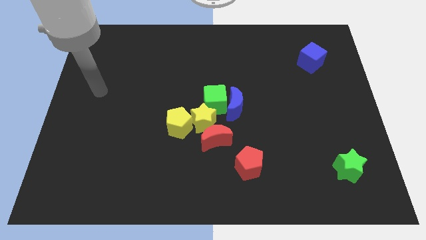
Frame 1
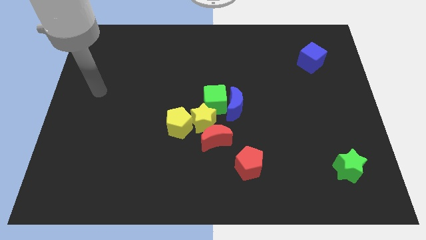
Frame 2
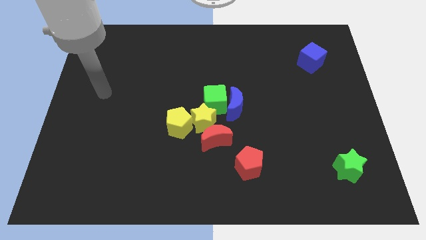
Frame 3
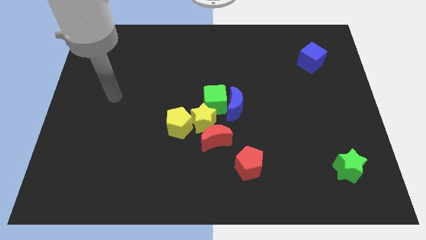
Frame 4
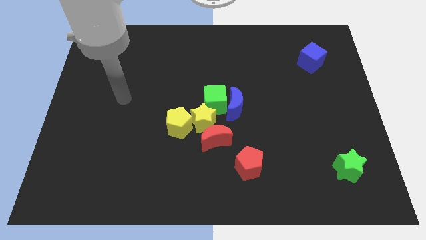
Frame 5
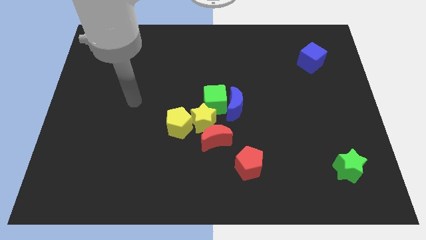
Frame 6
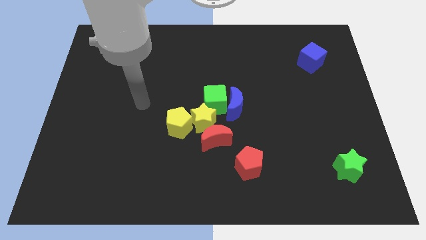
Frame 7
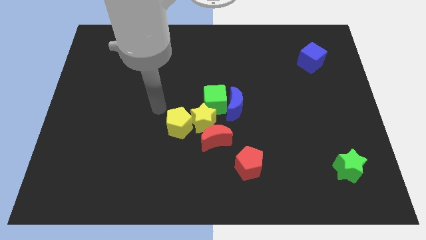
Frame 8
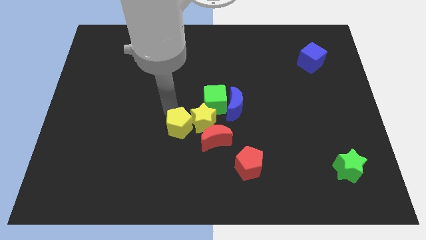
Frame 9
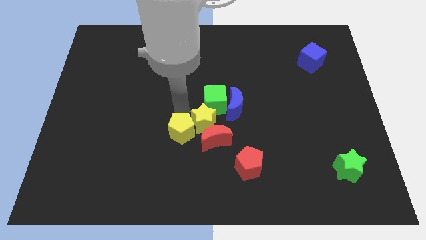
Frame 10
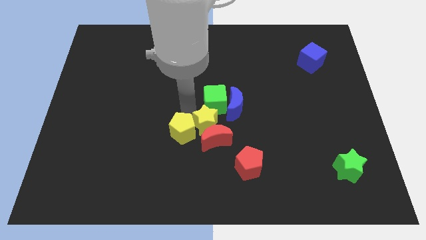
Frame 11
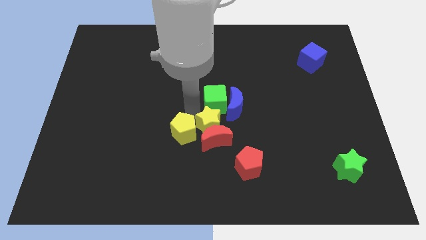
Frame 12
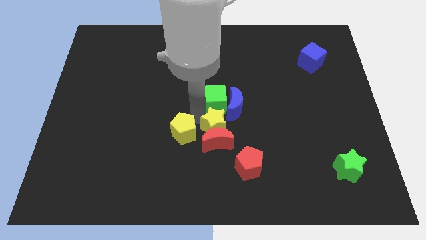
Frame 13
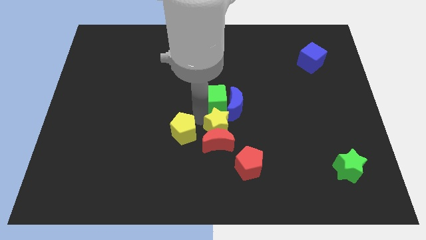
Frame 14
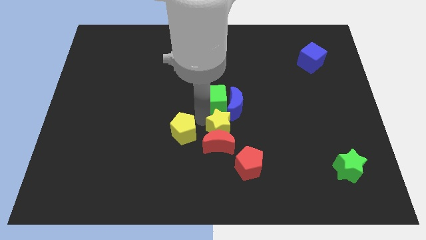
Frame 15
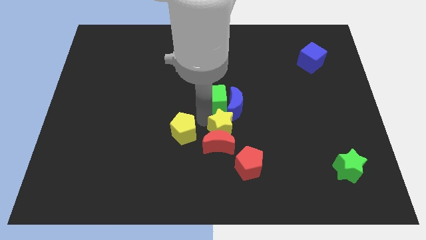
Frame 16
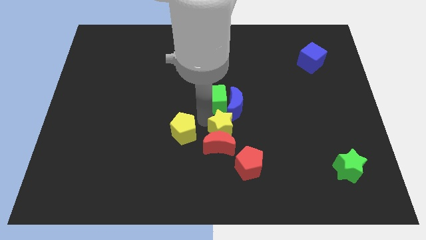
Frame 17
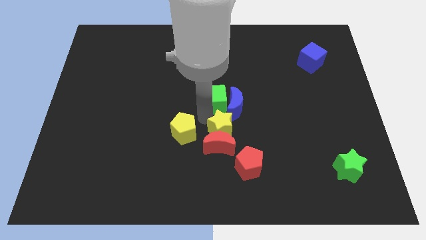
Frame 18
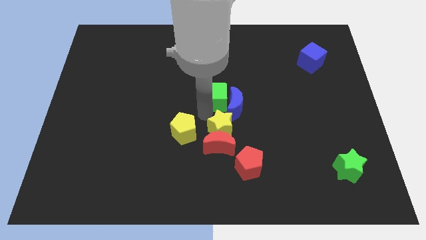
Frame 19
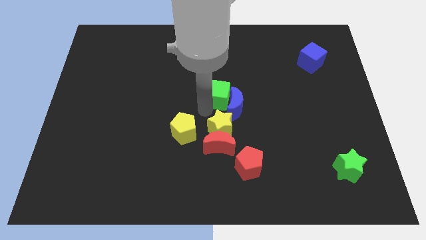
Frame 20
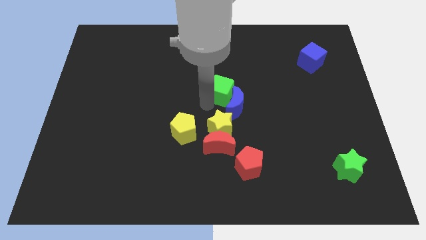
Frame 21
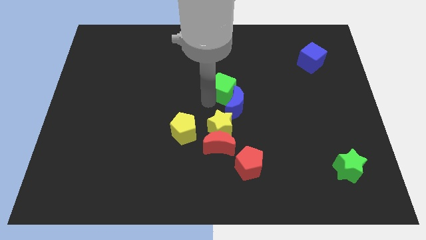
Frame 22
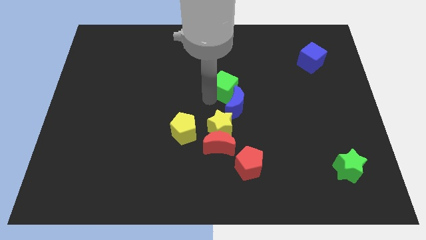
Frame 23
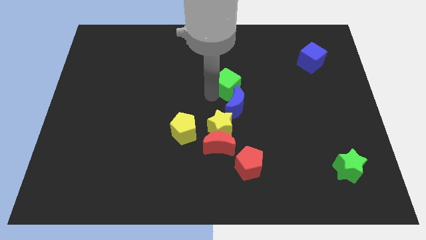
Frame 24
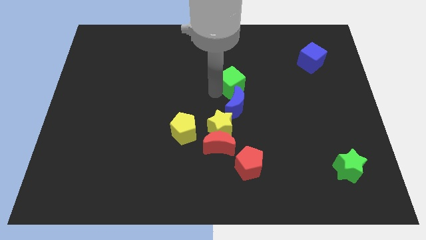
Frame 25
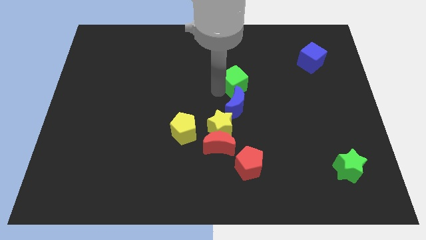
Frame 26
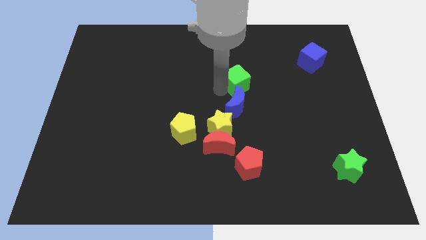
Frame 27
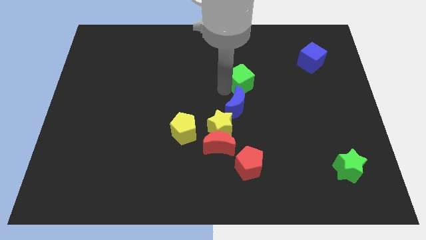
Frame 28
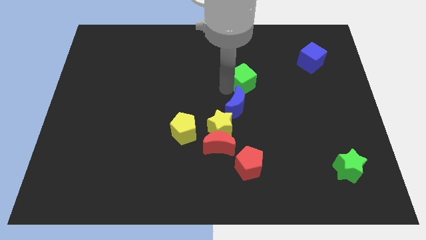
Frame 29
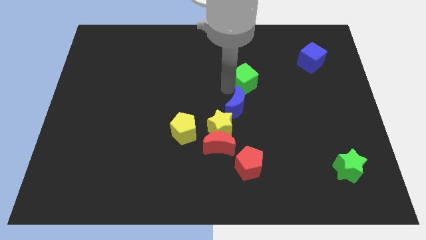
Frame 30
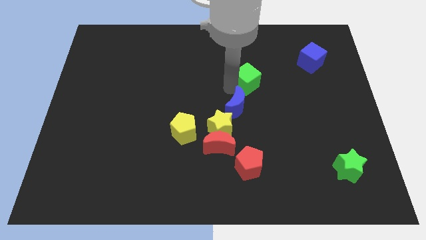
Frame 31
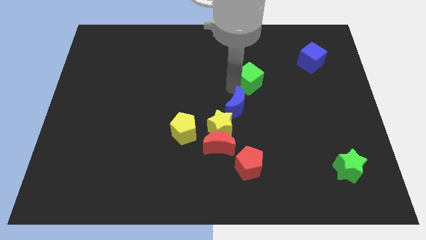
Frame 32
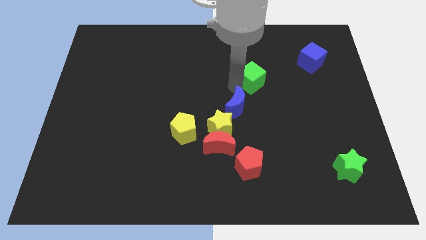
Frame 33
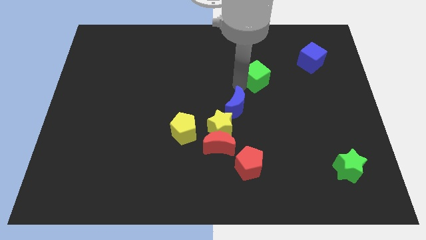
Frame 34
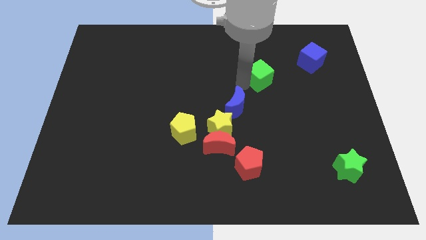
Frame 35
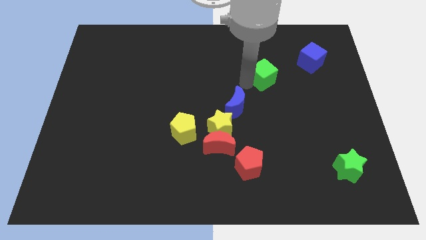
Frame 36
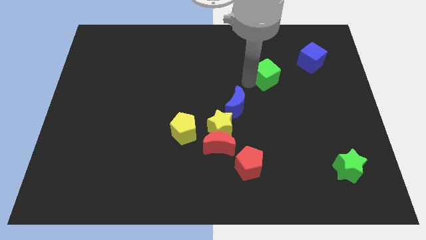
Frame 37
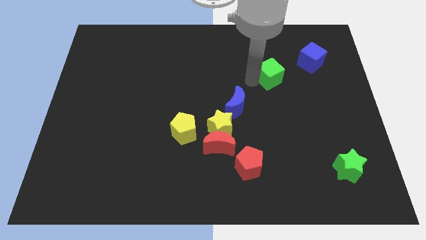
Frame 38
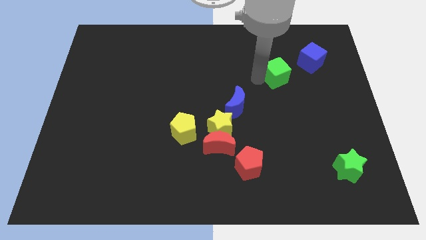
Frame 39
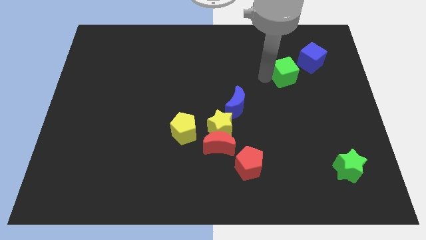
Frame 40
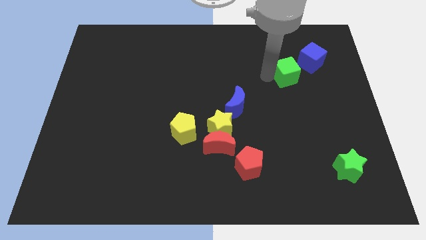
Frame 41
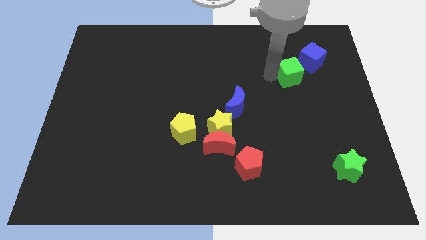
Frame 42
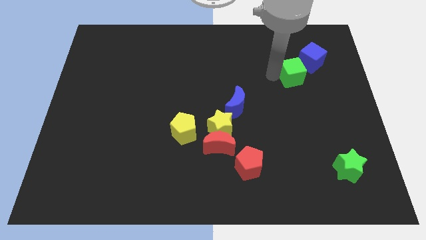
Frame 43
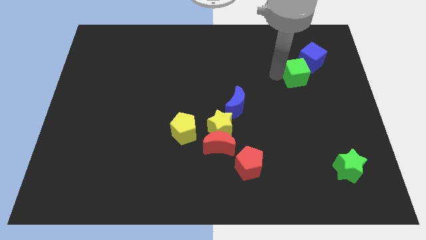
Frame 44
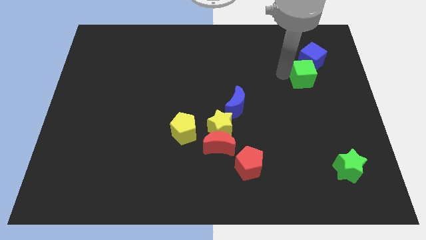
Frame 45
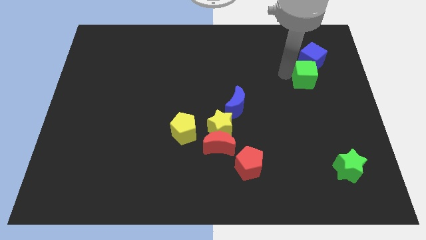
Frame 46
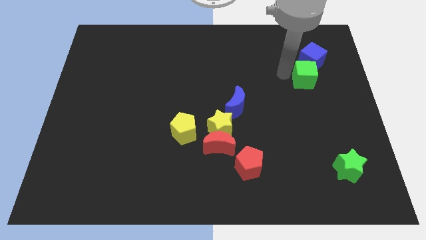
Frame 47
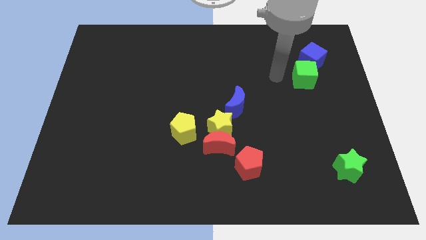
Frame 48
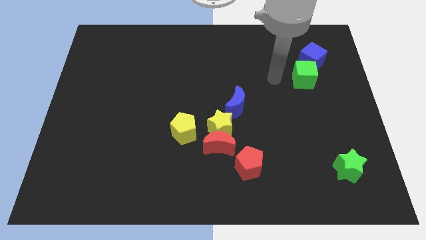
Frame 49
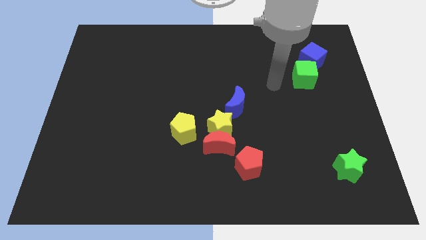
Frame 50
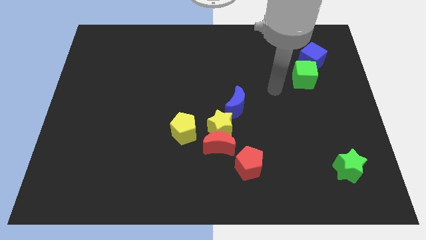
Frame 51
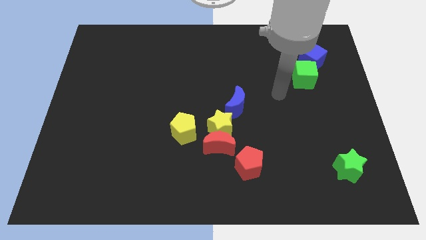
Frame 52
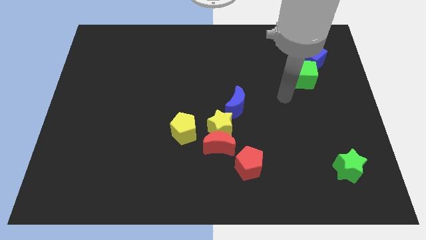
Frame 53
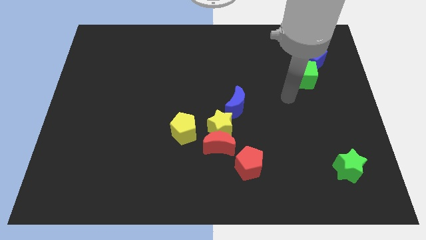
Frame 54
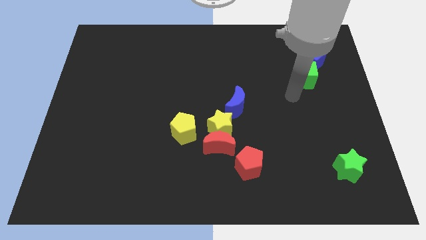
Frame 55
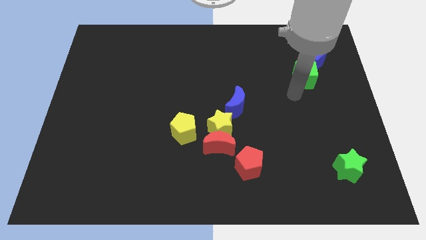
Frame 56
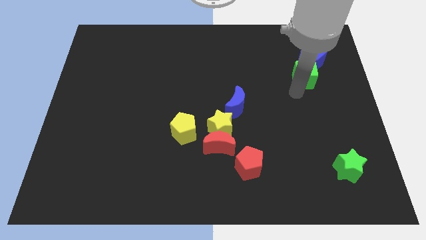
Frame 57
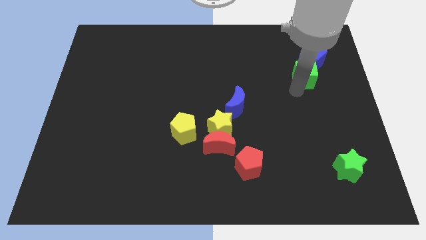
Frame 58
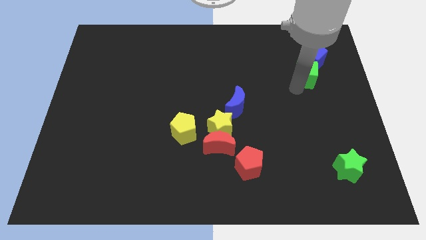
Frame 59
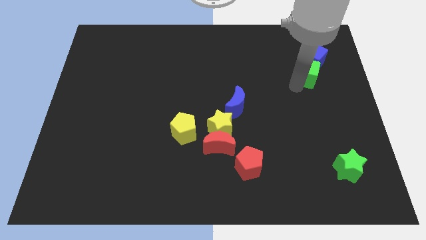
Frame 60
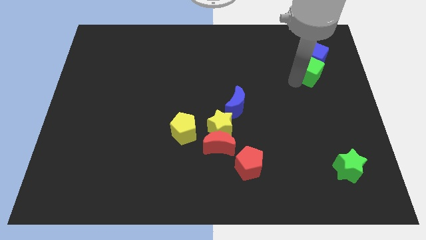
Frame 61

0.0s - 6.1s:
push the green cube towards the blue cube

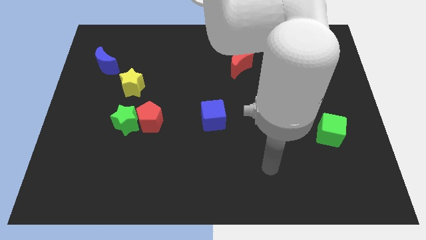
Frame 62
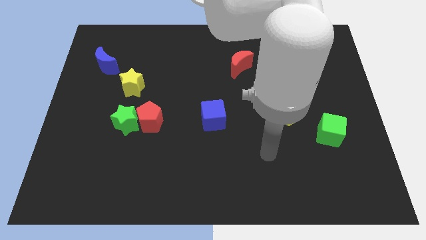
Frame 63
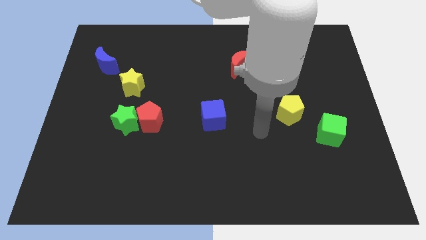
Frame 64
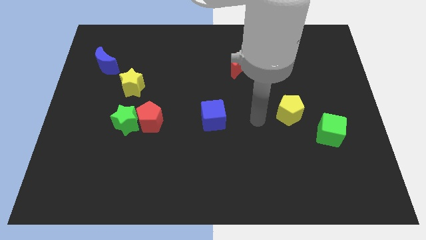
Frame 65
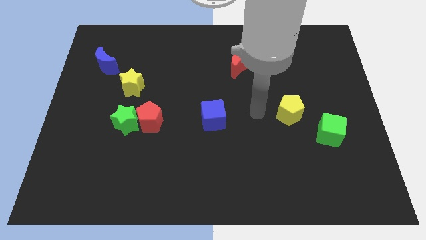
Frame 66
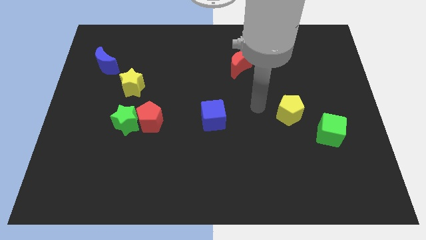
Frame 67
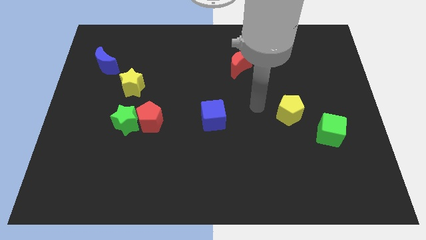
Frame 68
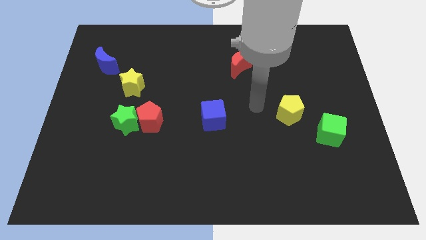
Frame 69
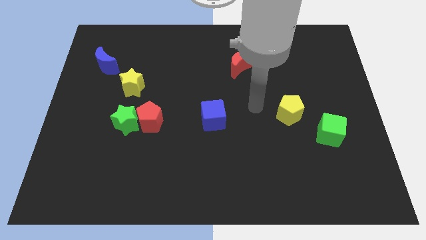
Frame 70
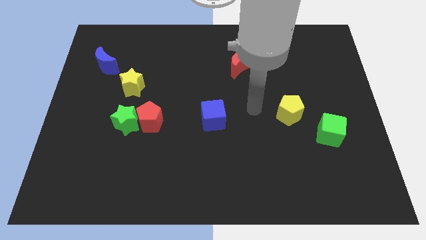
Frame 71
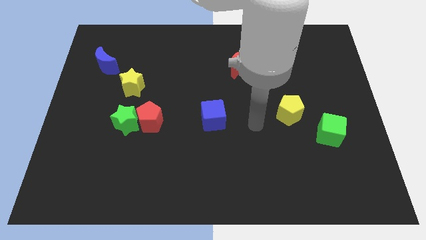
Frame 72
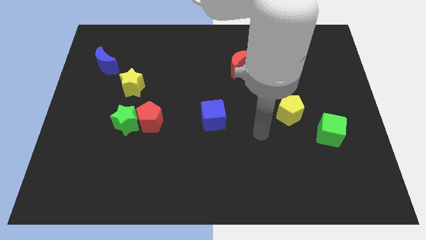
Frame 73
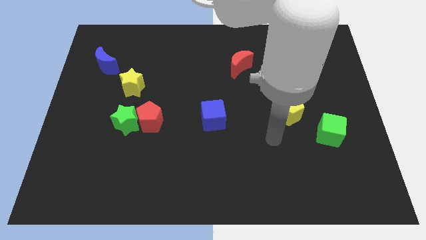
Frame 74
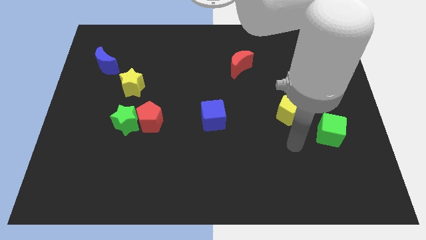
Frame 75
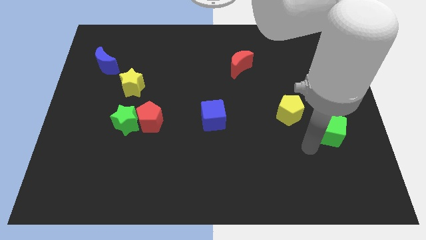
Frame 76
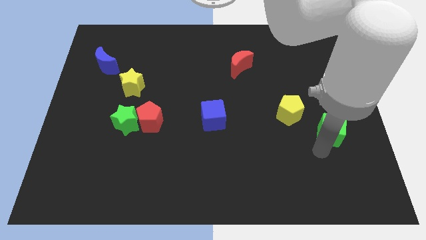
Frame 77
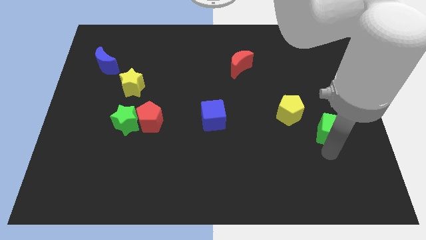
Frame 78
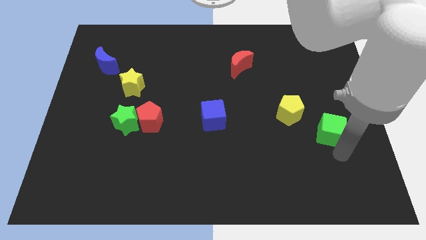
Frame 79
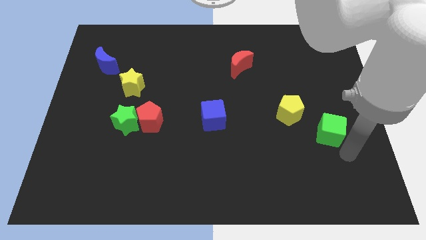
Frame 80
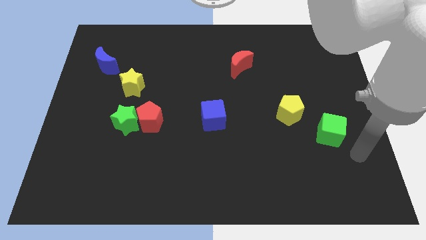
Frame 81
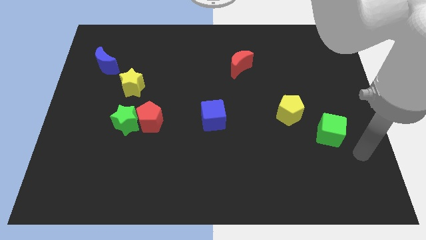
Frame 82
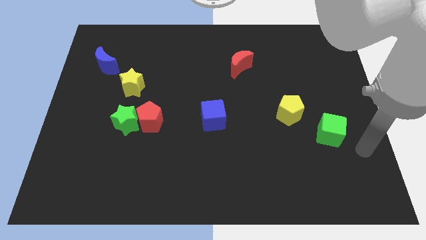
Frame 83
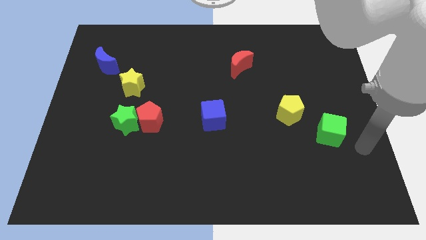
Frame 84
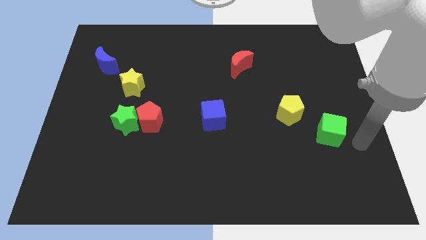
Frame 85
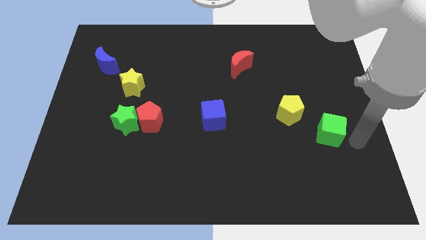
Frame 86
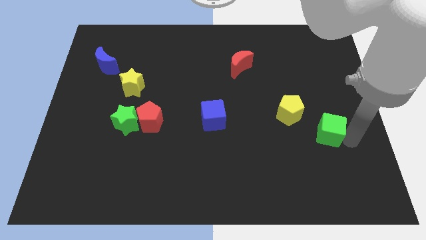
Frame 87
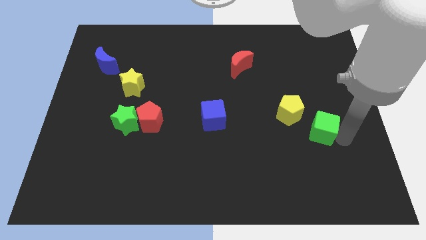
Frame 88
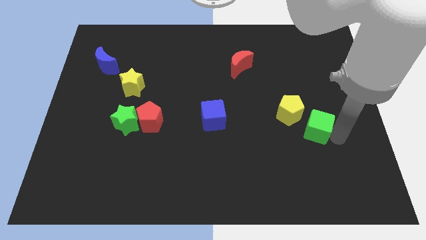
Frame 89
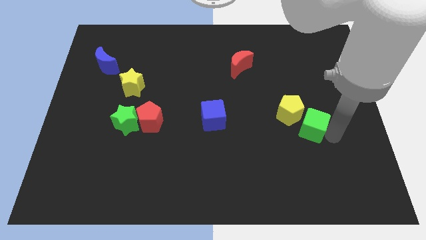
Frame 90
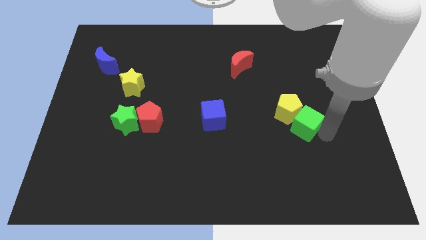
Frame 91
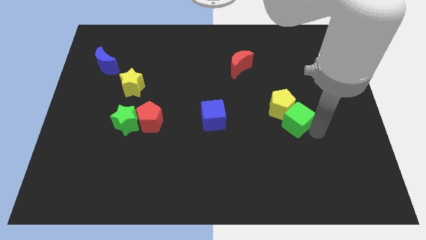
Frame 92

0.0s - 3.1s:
move the green cube to the yellow pentagon
